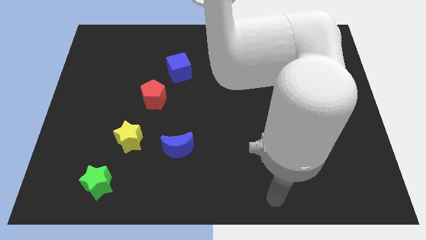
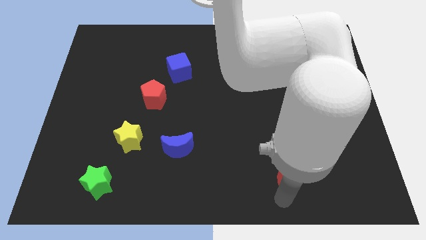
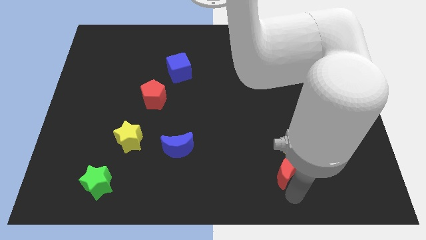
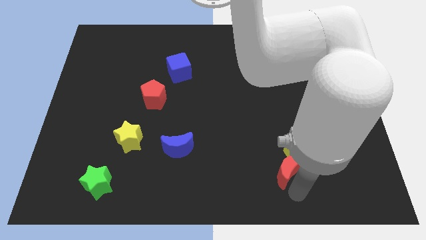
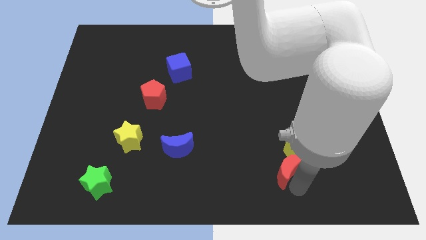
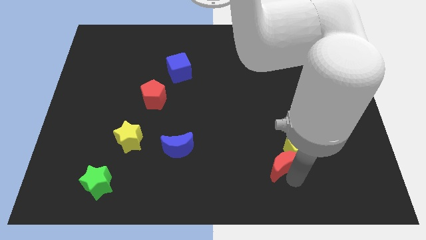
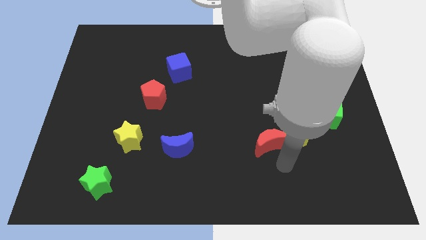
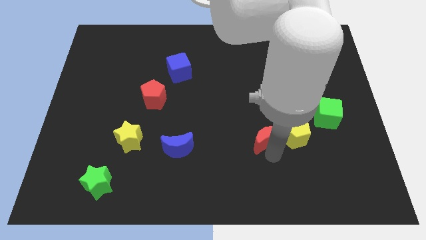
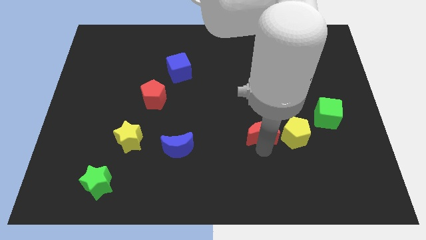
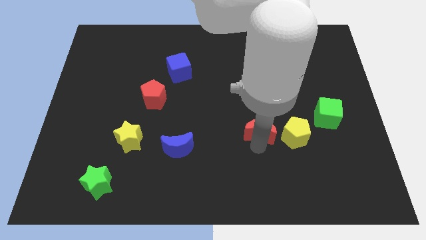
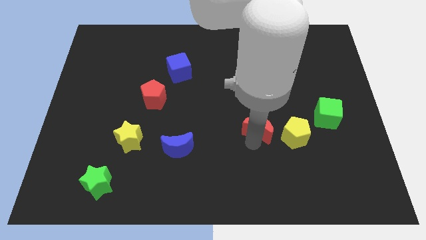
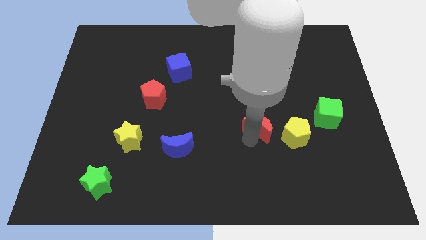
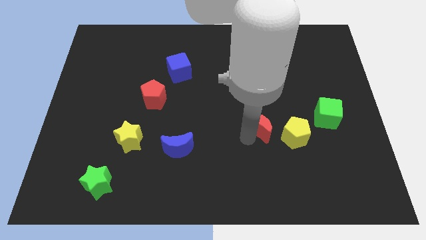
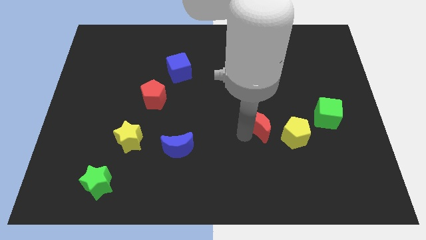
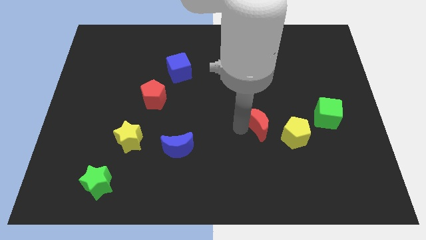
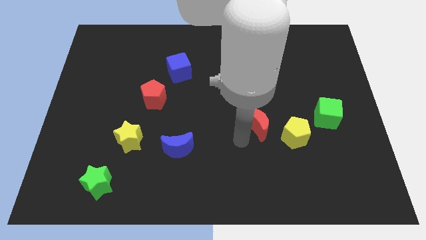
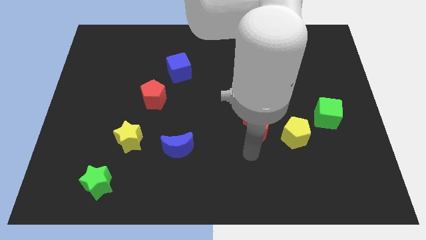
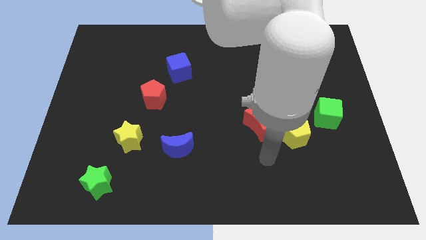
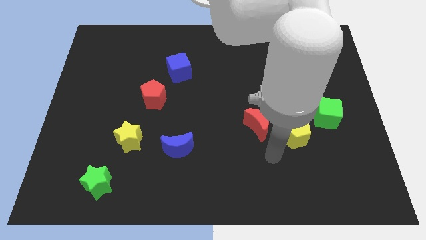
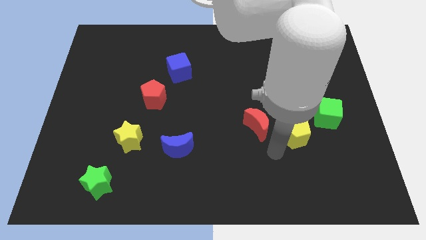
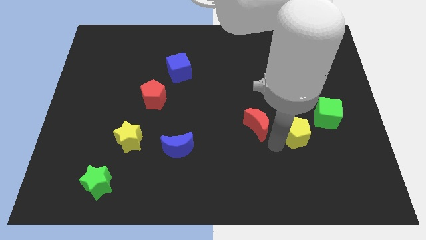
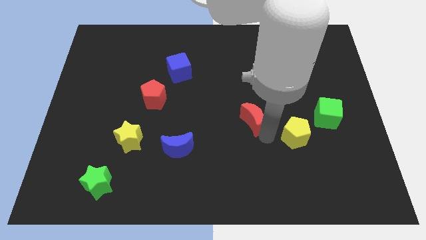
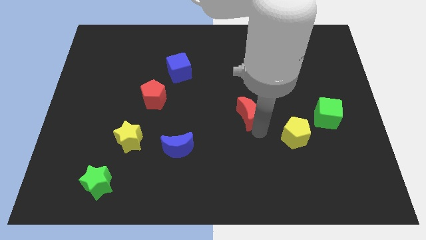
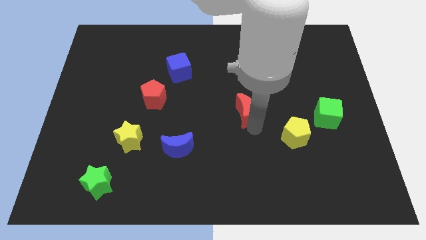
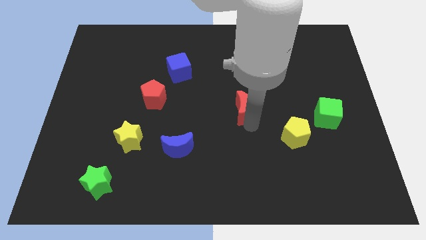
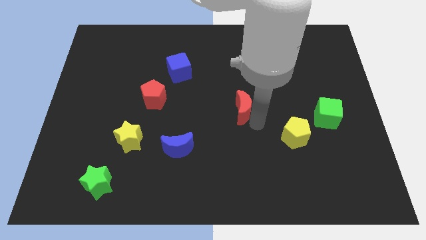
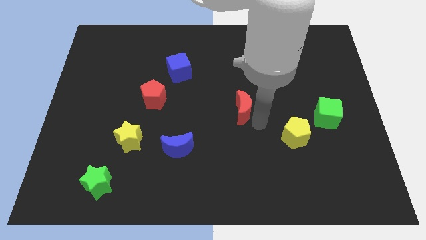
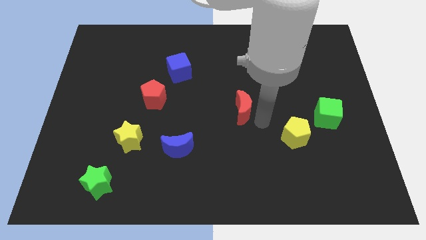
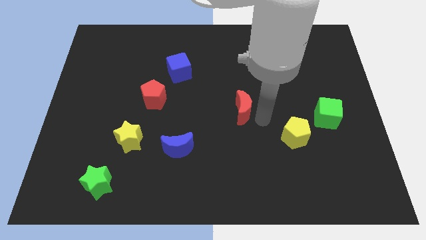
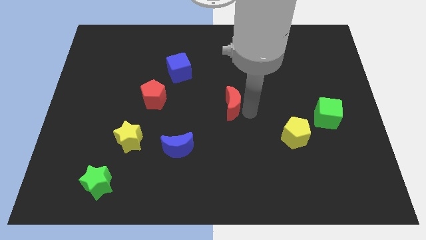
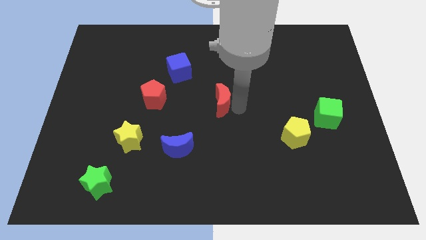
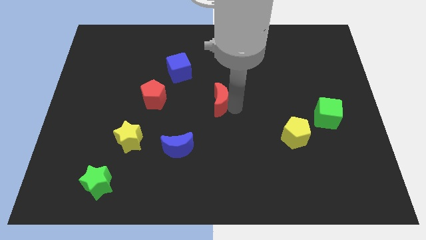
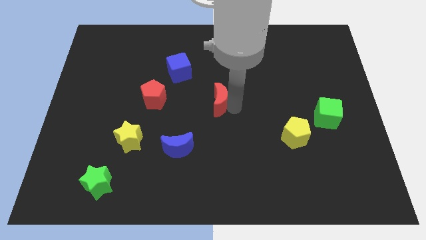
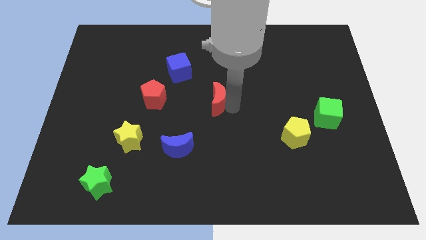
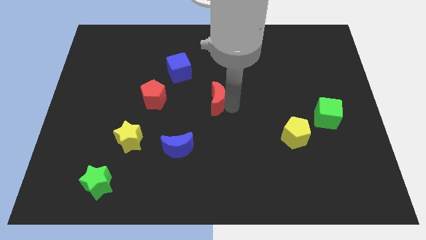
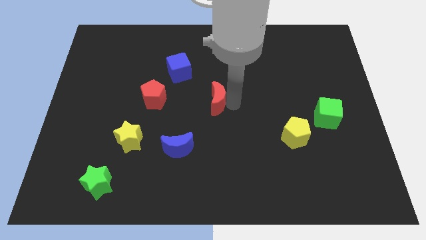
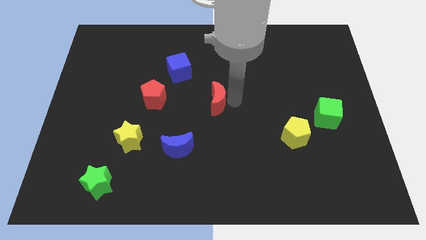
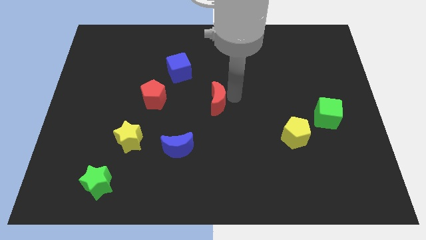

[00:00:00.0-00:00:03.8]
place the red moon to the right of the red pentagon

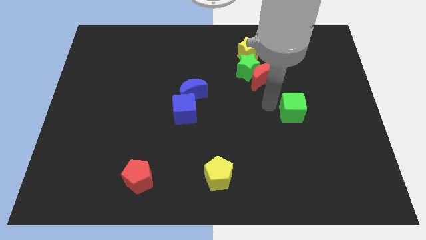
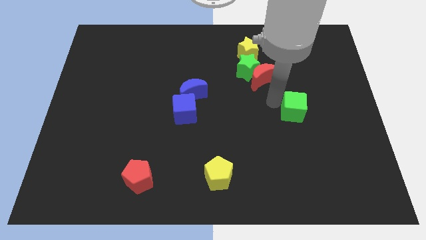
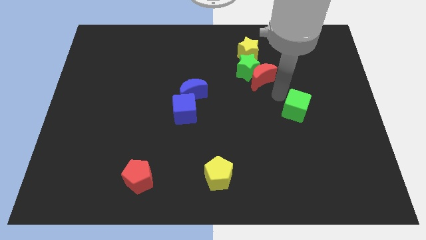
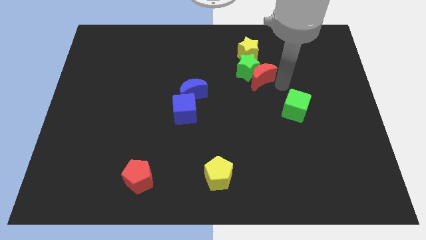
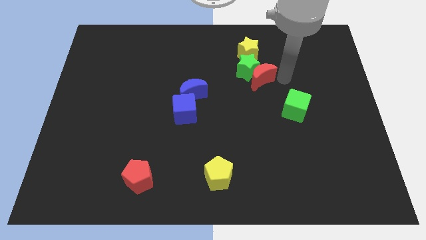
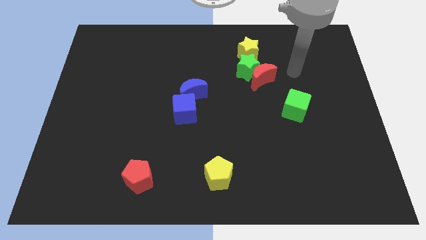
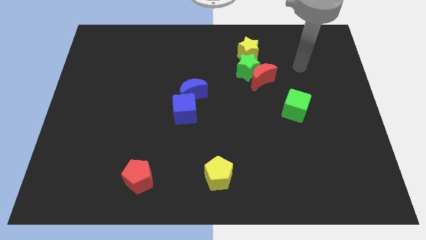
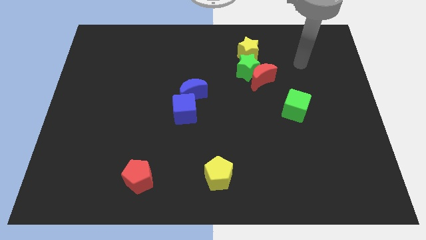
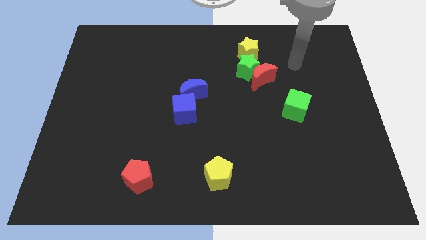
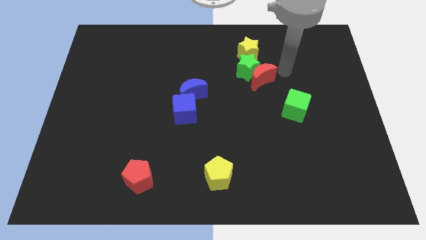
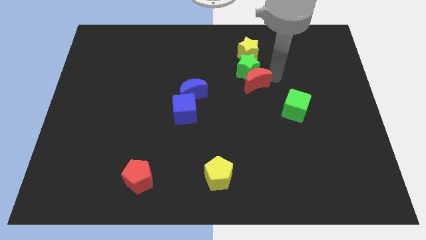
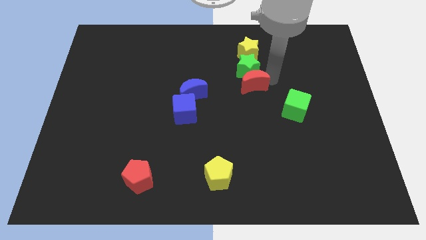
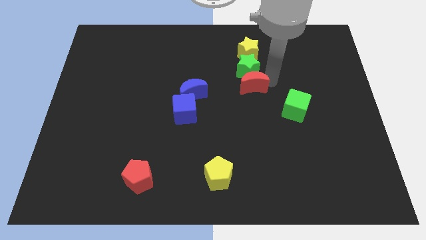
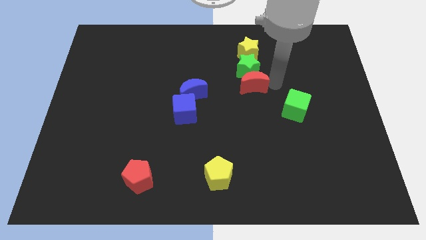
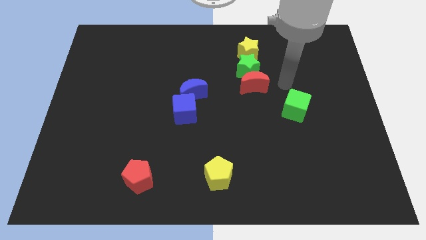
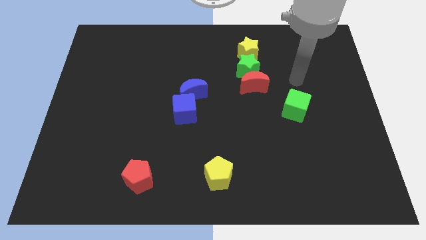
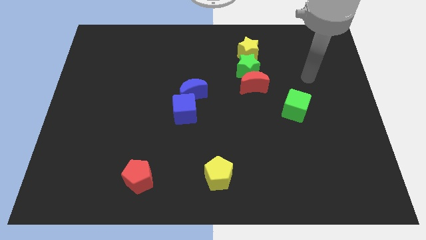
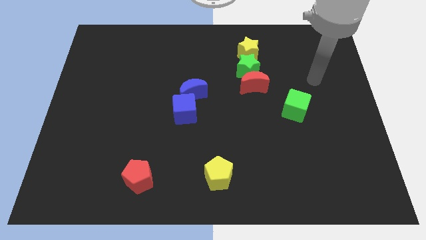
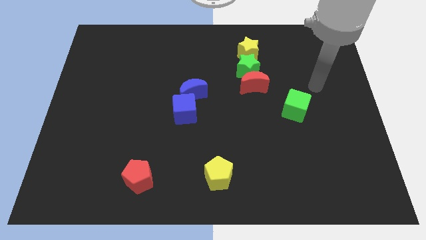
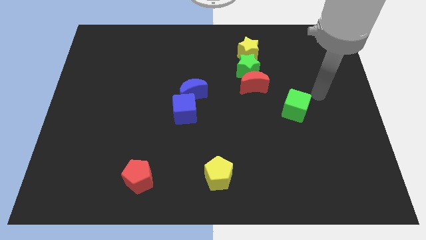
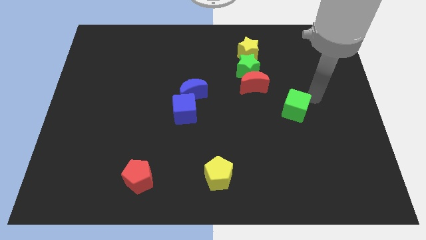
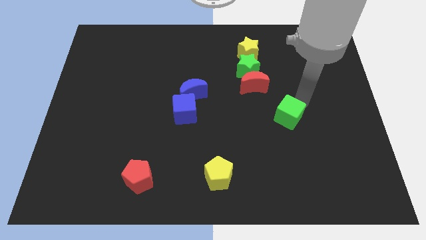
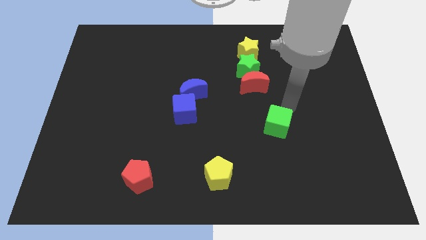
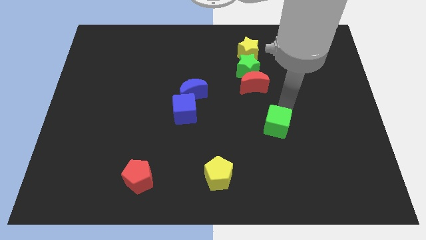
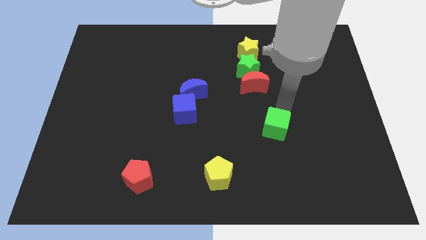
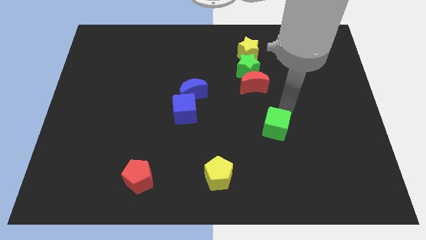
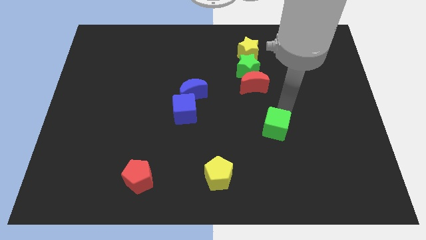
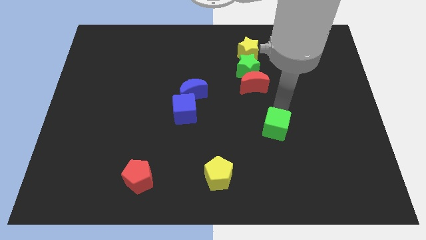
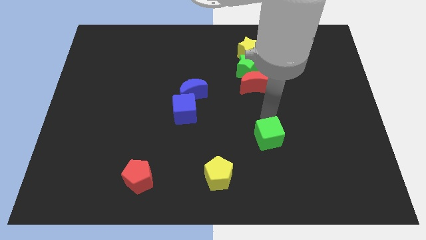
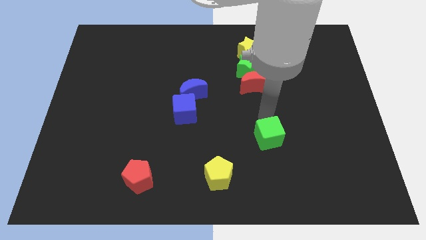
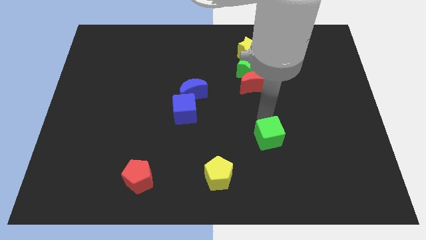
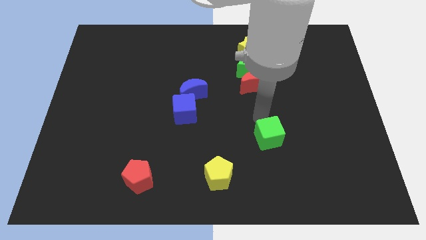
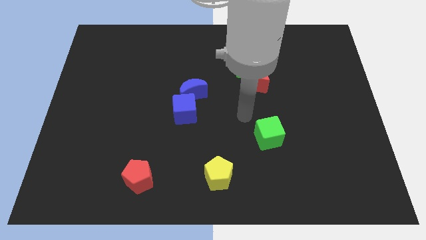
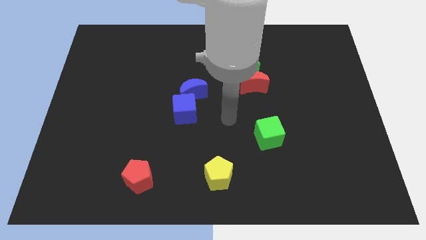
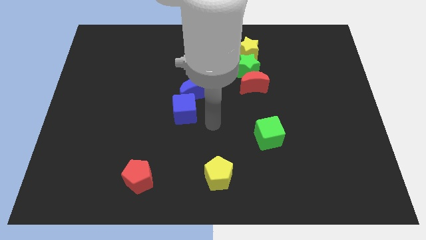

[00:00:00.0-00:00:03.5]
move green cube diagonally to the yellow pentagon

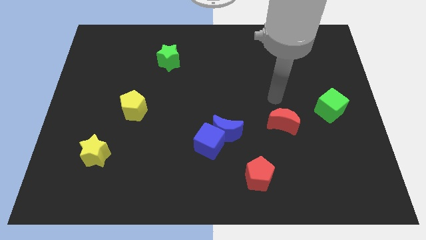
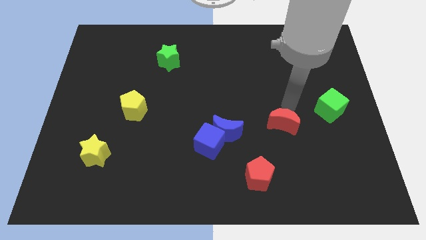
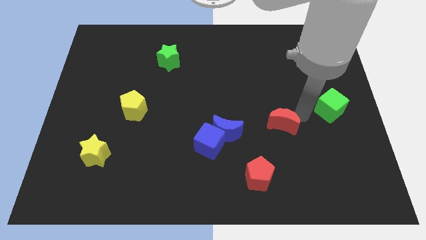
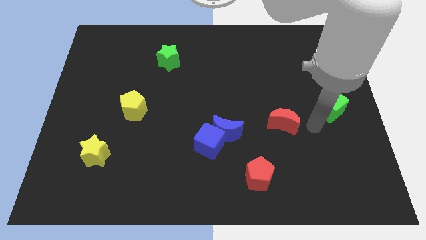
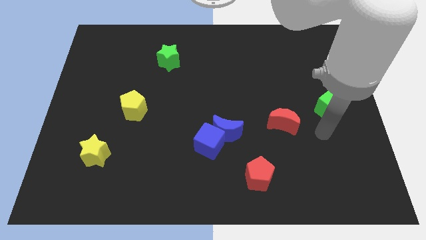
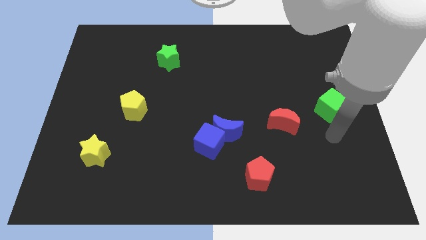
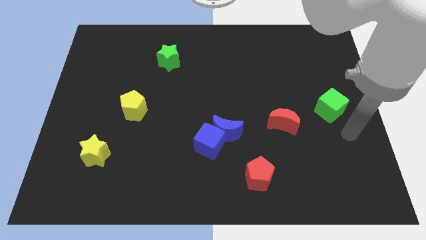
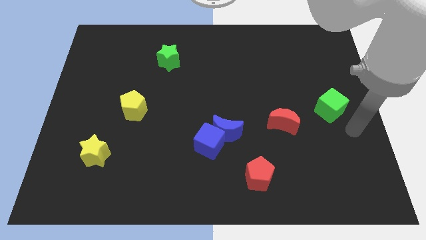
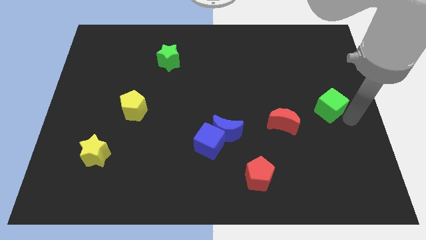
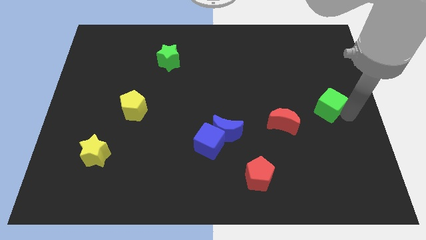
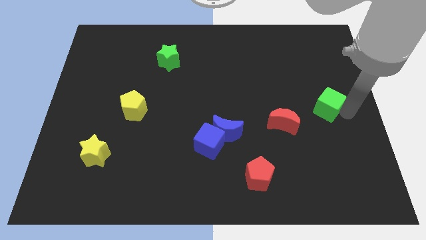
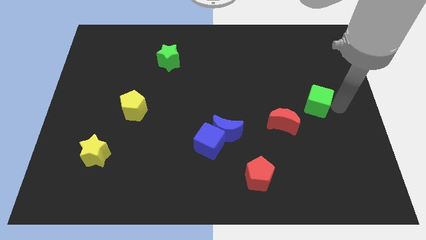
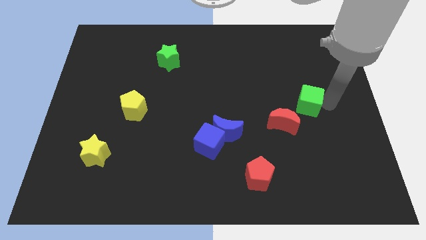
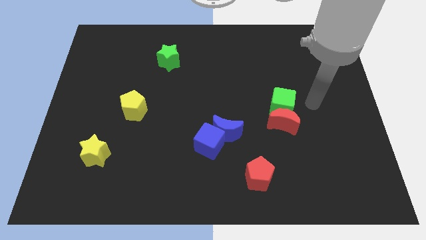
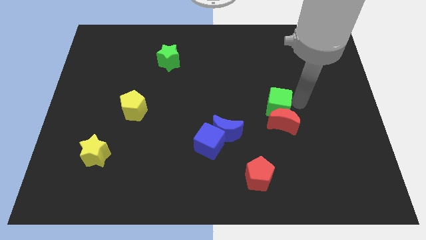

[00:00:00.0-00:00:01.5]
move green cube above red moon

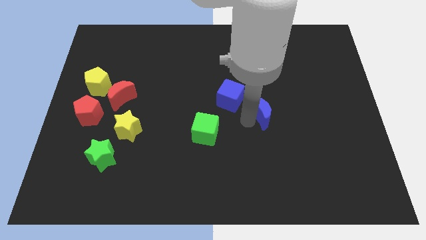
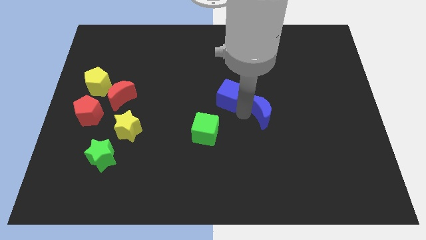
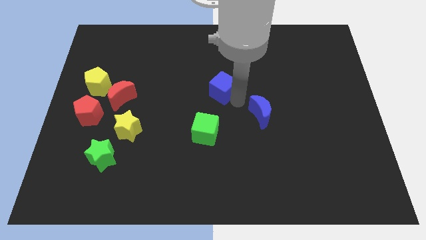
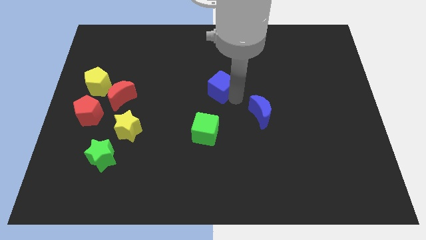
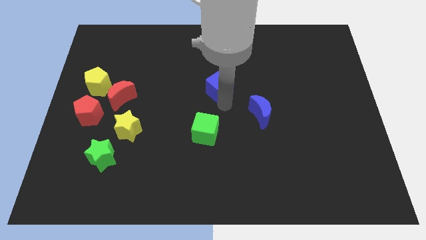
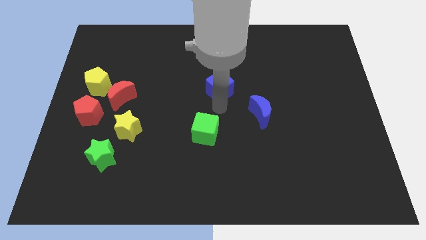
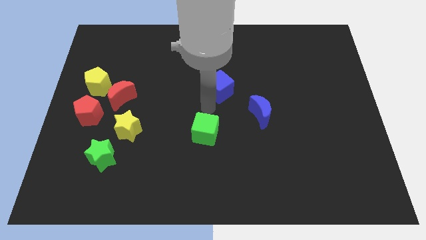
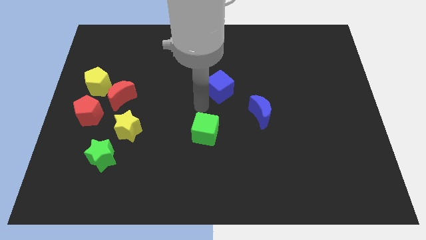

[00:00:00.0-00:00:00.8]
separate the blue cube and the blue crescent
